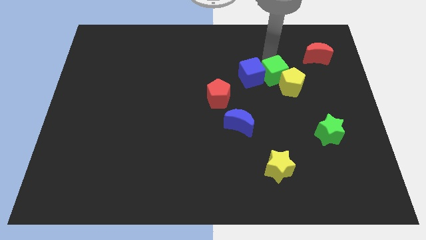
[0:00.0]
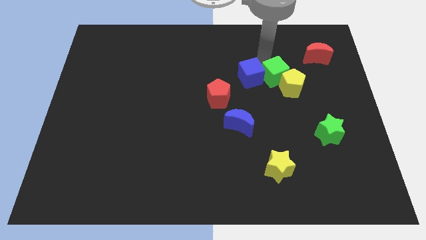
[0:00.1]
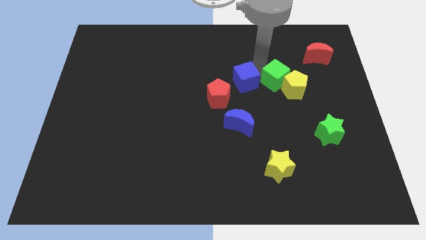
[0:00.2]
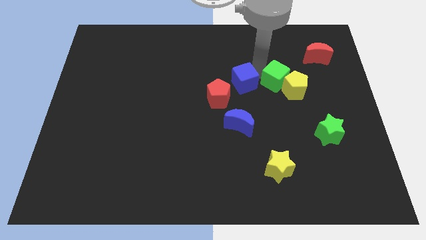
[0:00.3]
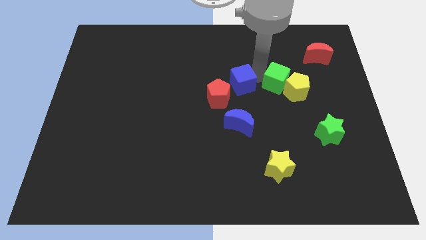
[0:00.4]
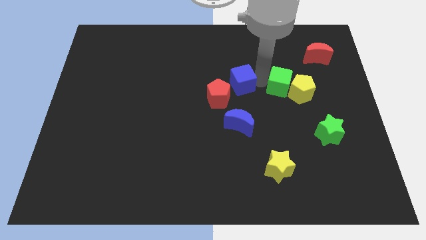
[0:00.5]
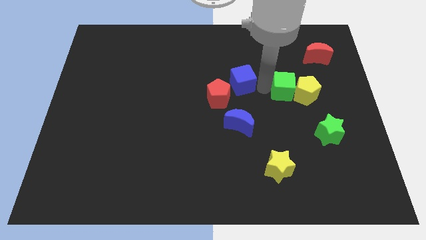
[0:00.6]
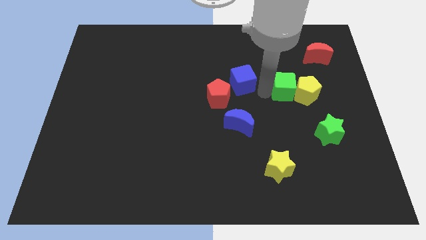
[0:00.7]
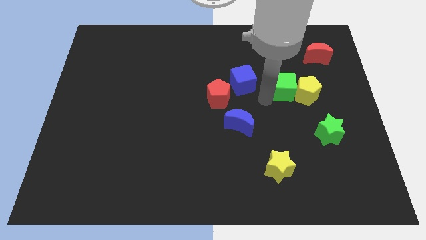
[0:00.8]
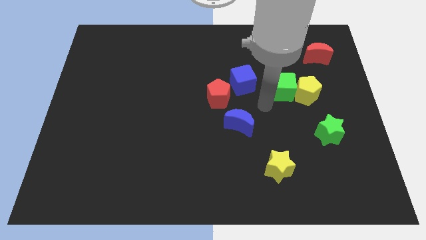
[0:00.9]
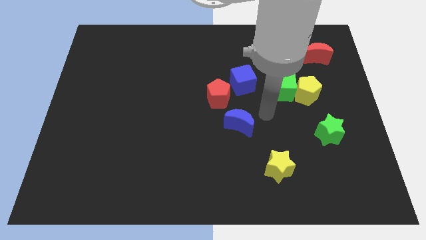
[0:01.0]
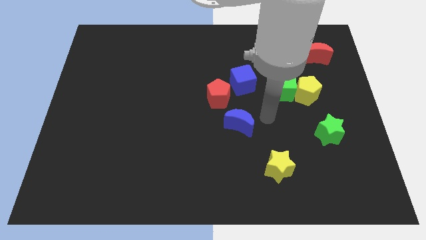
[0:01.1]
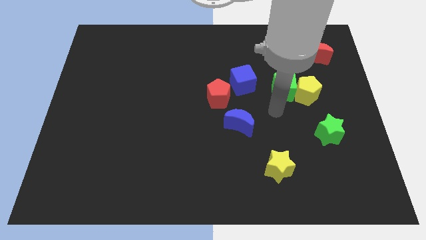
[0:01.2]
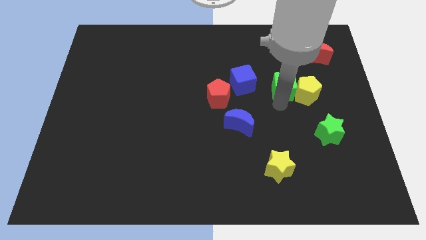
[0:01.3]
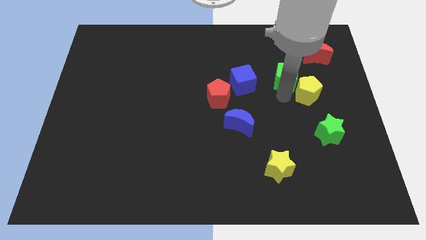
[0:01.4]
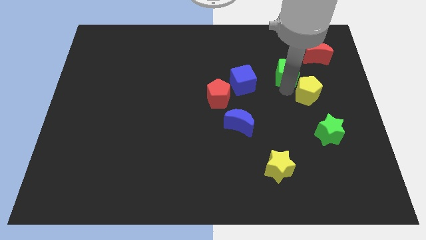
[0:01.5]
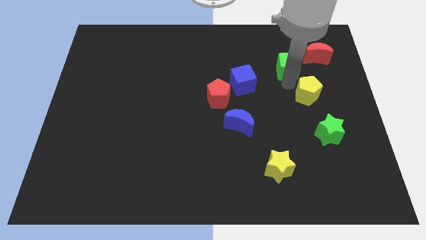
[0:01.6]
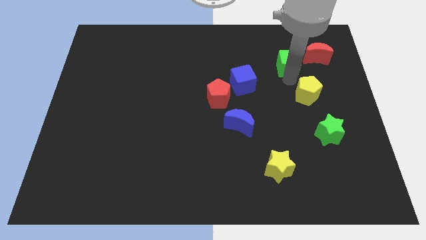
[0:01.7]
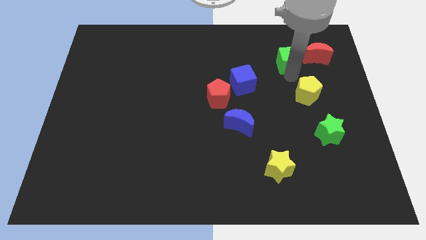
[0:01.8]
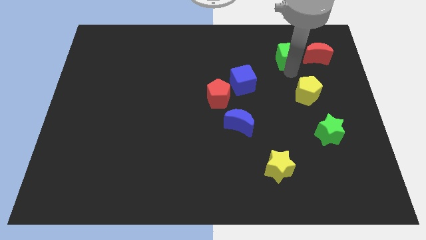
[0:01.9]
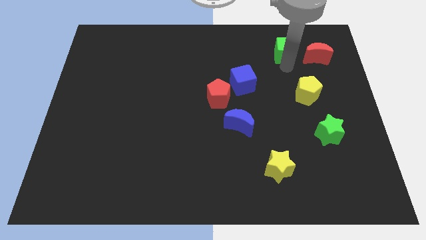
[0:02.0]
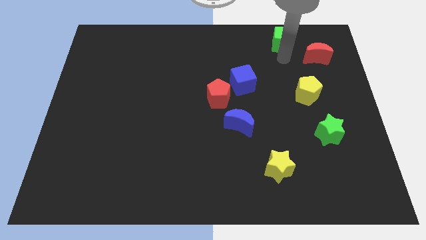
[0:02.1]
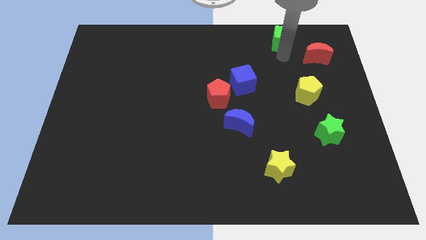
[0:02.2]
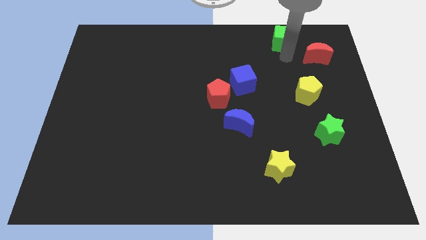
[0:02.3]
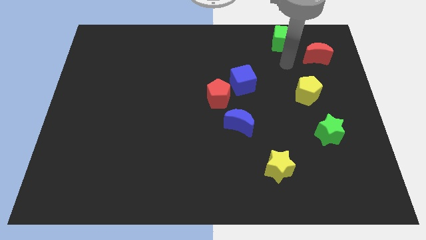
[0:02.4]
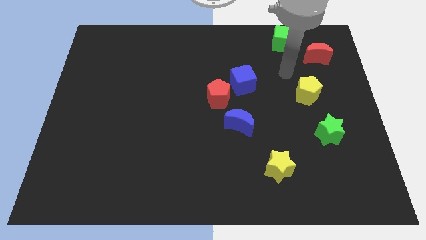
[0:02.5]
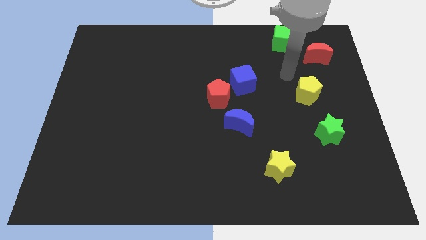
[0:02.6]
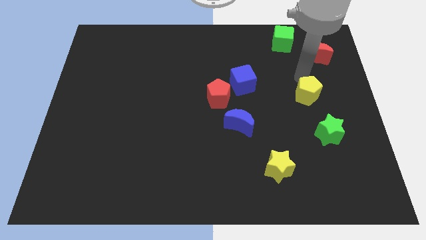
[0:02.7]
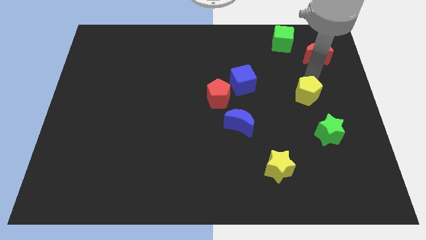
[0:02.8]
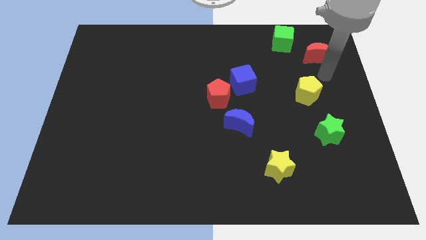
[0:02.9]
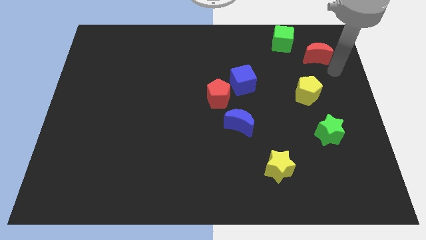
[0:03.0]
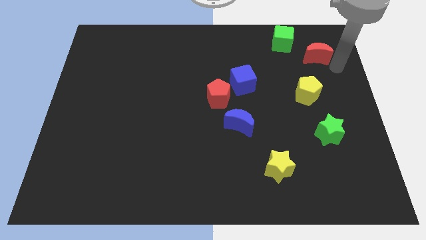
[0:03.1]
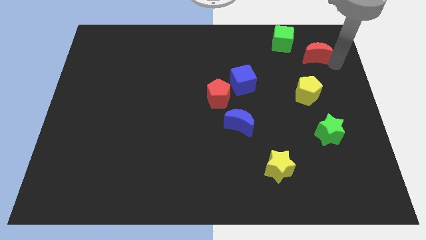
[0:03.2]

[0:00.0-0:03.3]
move the green cube to the top of the board

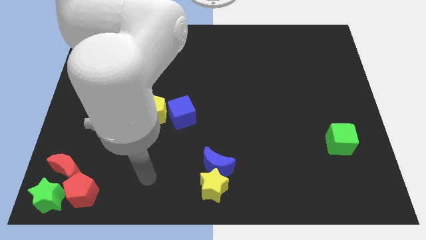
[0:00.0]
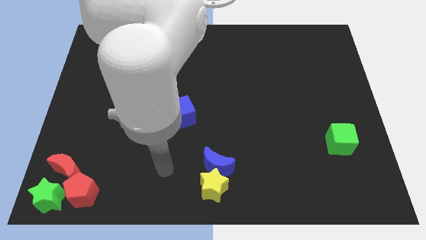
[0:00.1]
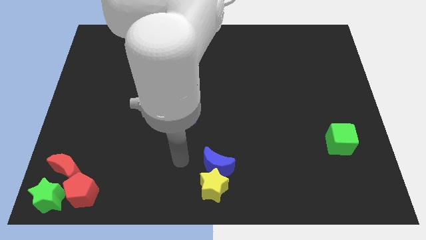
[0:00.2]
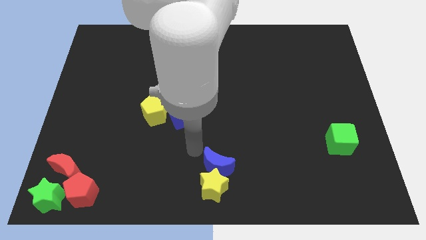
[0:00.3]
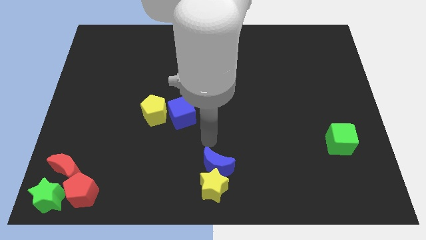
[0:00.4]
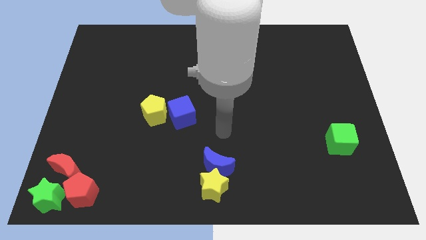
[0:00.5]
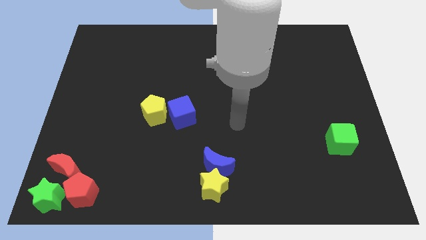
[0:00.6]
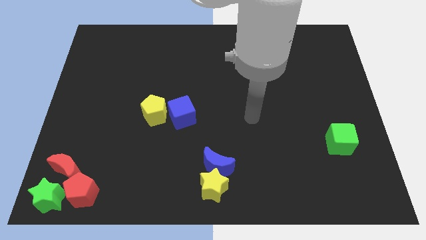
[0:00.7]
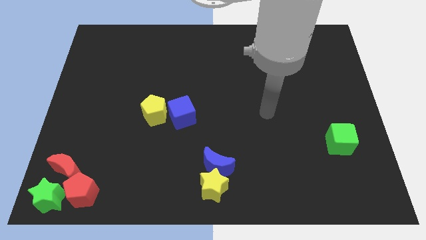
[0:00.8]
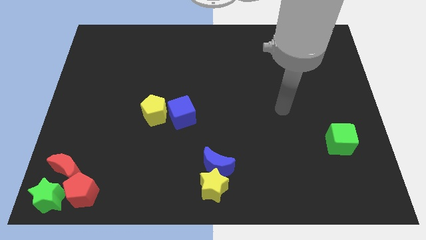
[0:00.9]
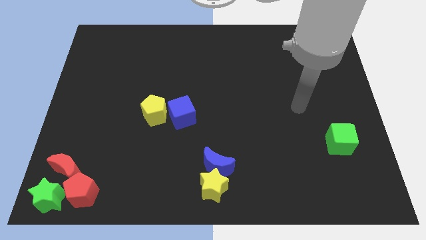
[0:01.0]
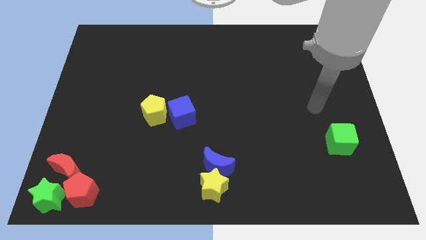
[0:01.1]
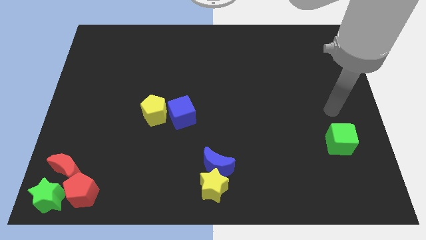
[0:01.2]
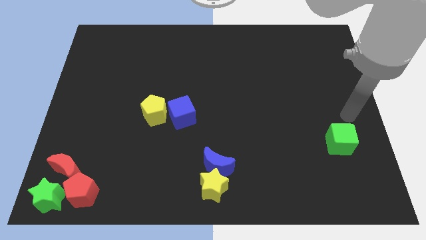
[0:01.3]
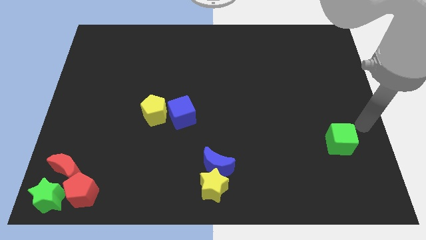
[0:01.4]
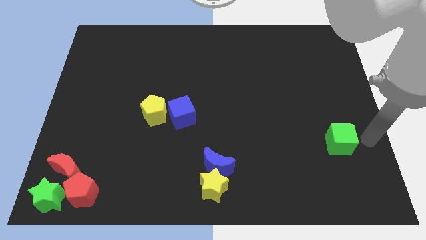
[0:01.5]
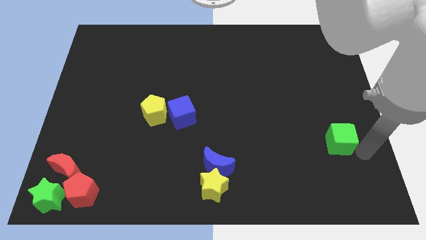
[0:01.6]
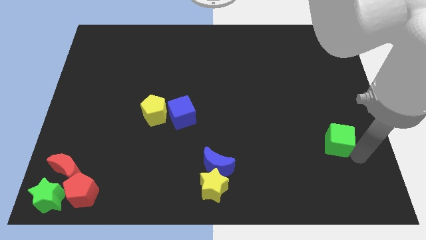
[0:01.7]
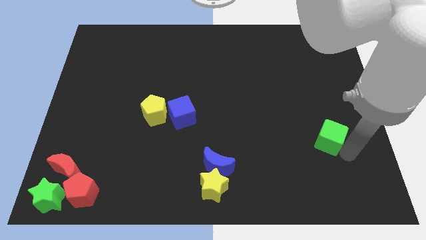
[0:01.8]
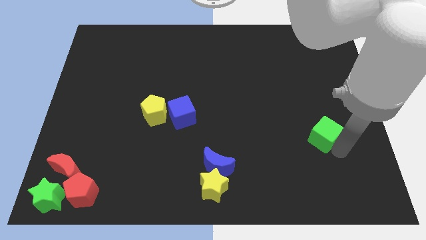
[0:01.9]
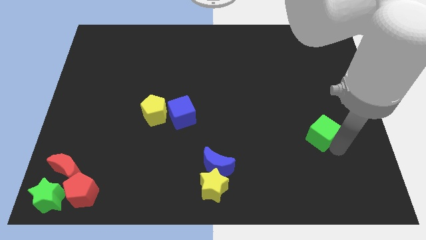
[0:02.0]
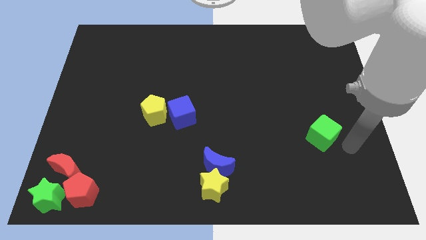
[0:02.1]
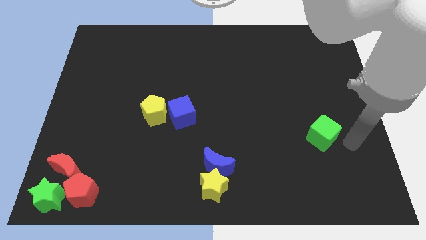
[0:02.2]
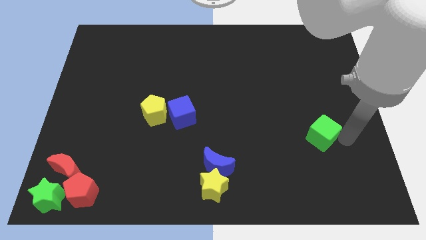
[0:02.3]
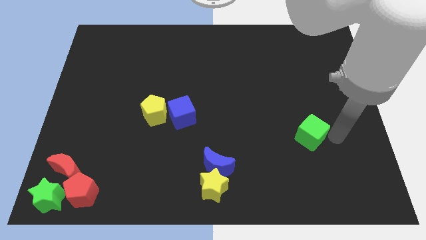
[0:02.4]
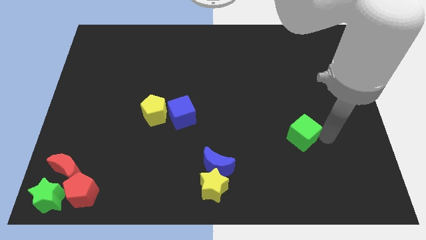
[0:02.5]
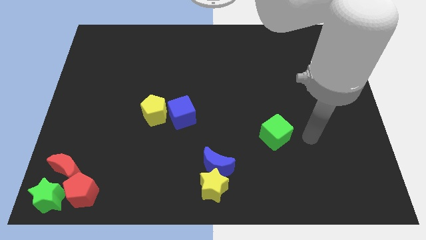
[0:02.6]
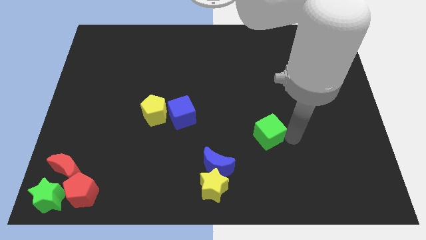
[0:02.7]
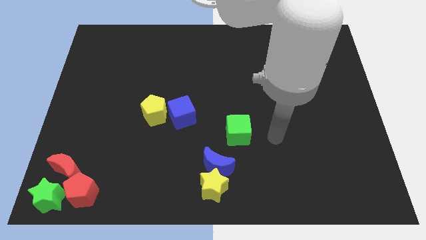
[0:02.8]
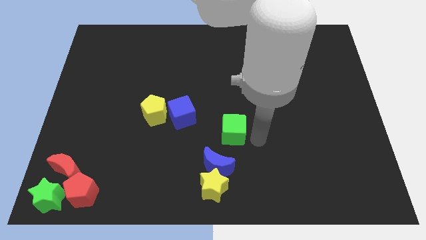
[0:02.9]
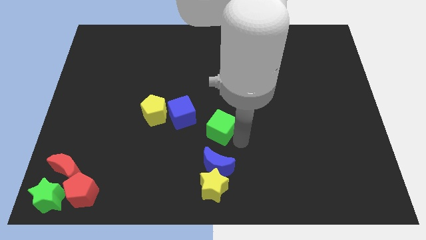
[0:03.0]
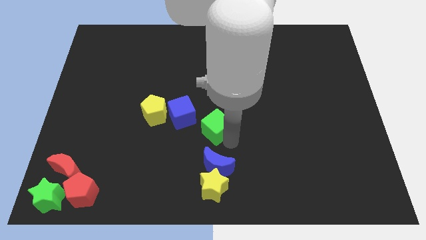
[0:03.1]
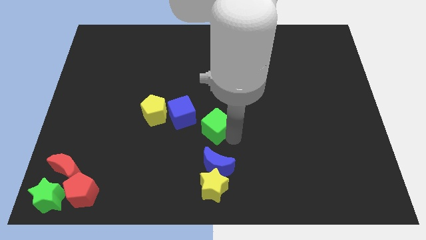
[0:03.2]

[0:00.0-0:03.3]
push the green cube to the top side of the blue moon

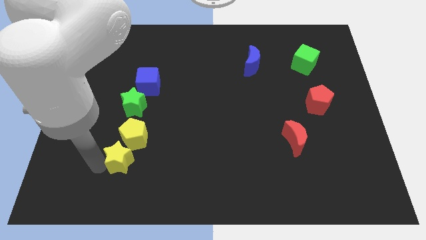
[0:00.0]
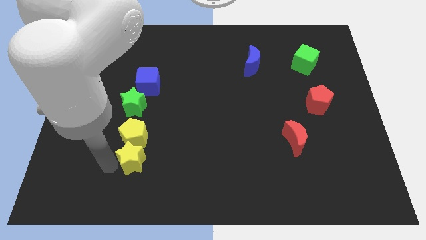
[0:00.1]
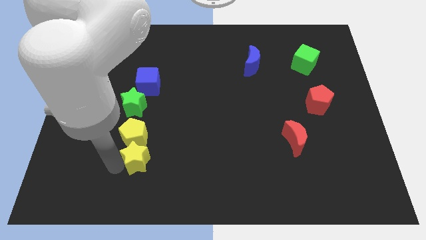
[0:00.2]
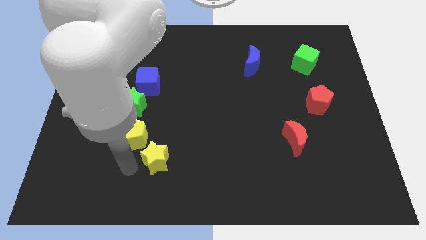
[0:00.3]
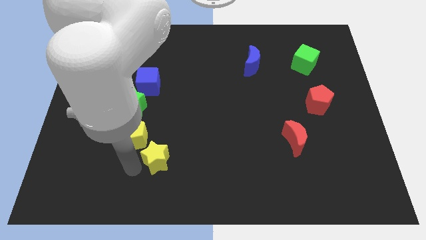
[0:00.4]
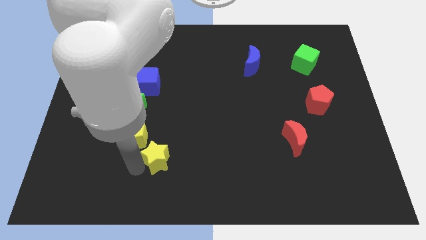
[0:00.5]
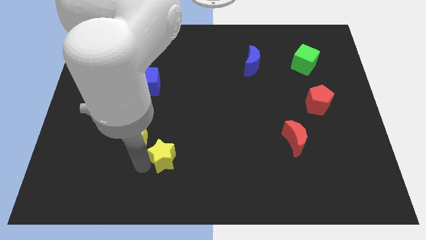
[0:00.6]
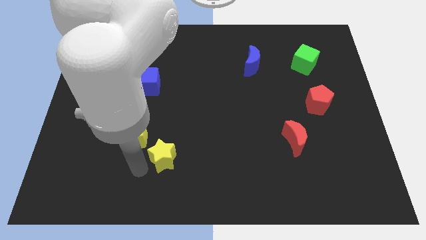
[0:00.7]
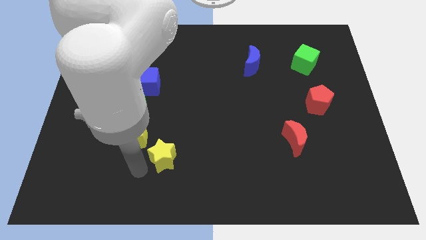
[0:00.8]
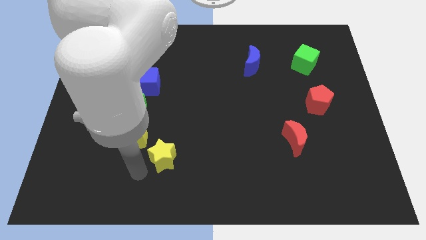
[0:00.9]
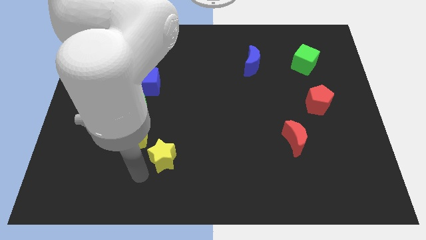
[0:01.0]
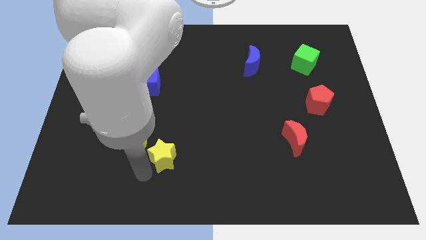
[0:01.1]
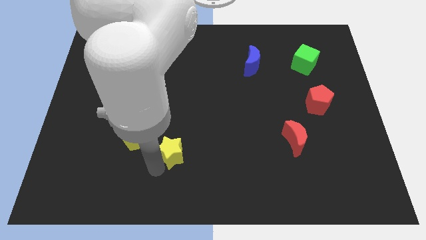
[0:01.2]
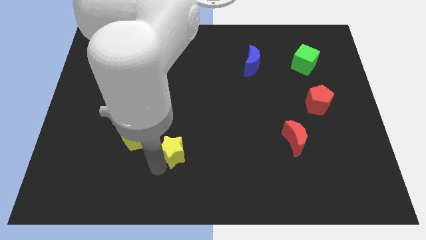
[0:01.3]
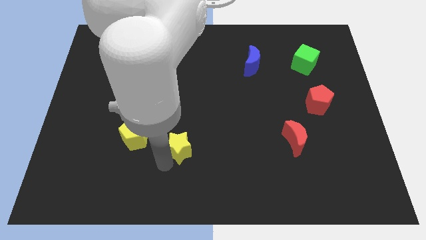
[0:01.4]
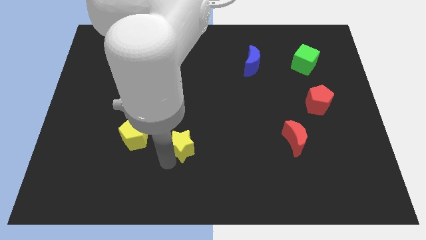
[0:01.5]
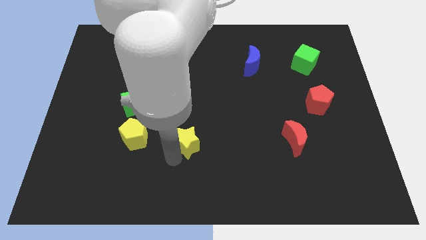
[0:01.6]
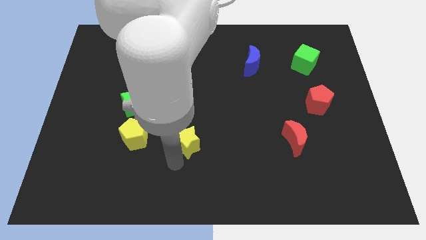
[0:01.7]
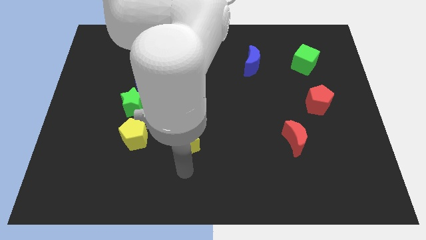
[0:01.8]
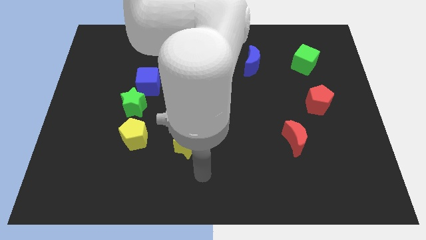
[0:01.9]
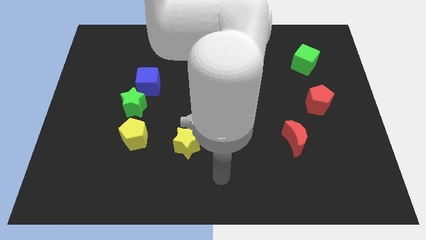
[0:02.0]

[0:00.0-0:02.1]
separate yellow star from yellow pentagon

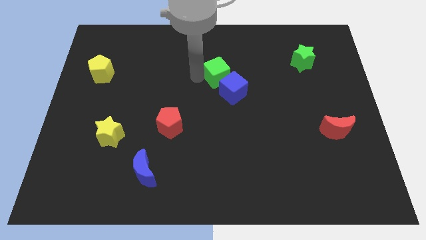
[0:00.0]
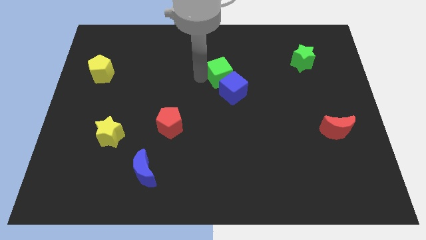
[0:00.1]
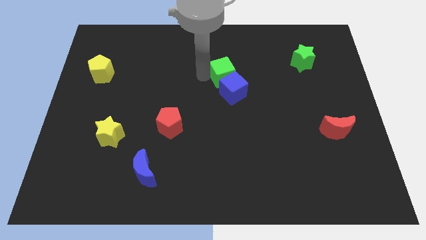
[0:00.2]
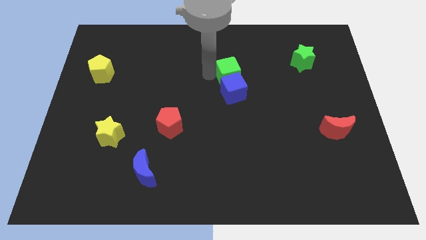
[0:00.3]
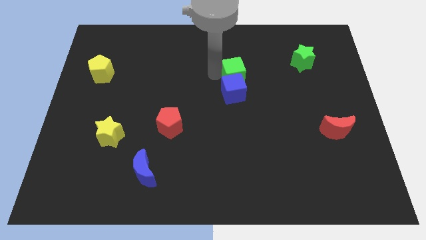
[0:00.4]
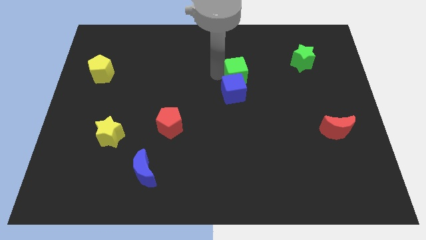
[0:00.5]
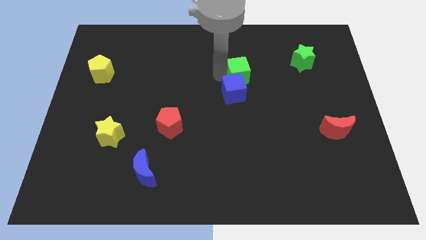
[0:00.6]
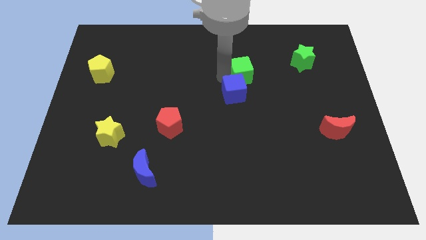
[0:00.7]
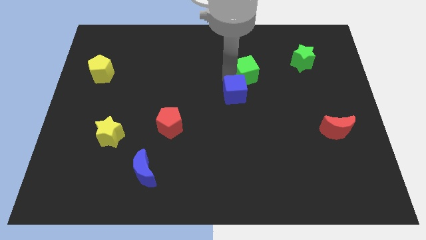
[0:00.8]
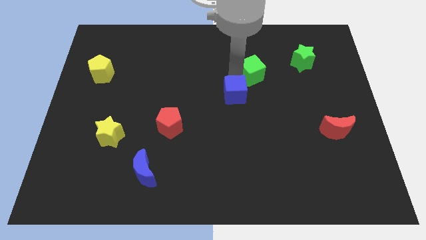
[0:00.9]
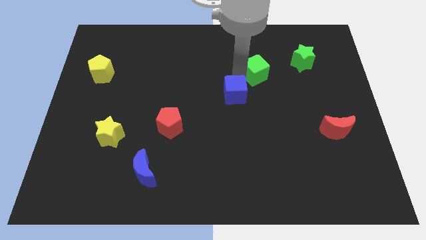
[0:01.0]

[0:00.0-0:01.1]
slide the green cube slightly to the right
